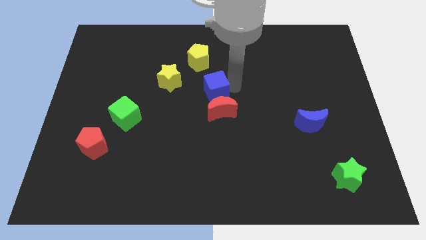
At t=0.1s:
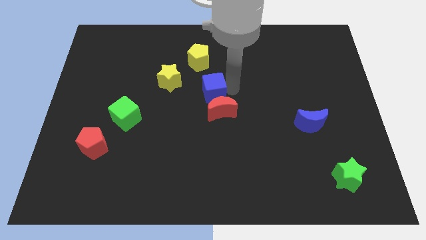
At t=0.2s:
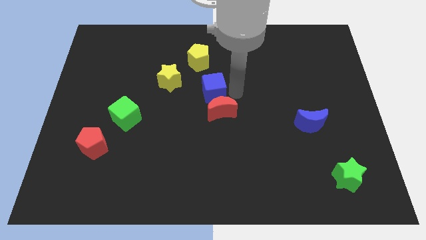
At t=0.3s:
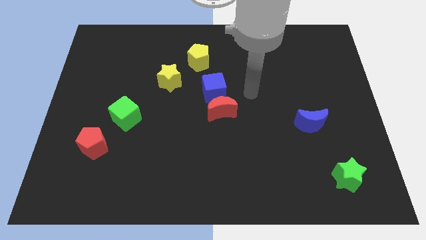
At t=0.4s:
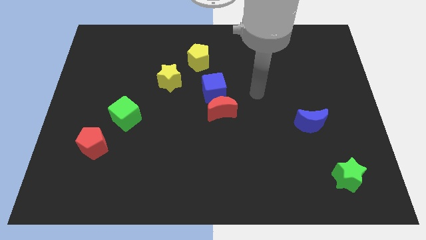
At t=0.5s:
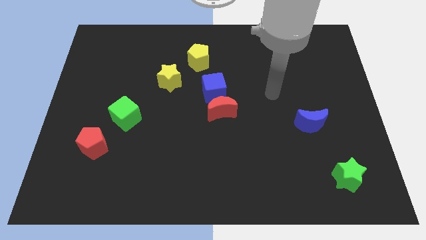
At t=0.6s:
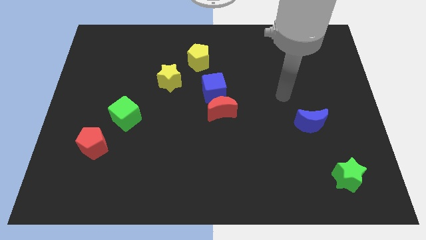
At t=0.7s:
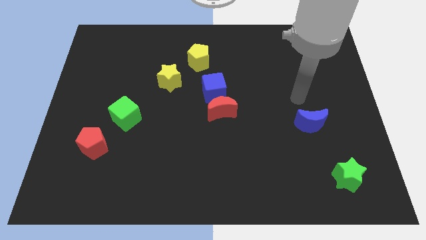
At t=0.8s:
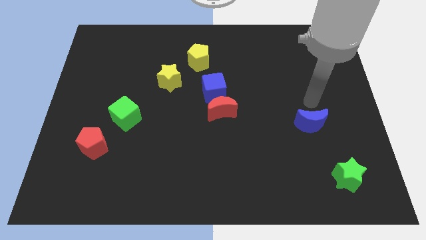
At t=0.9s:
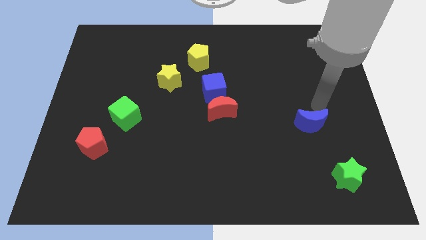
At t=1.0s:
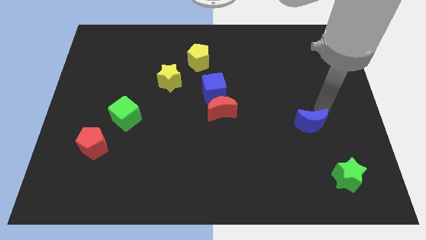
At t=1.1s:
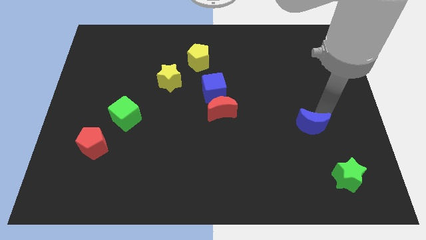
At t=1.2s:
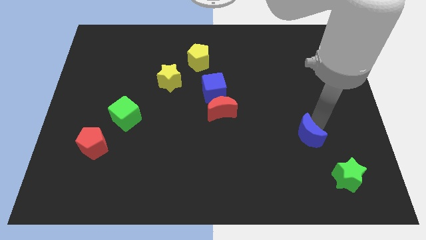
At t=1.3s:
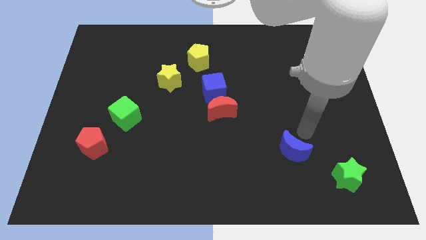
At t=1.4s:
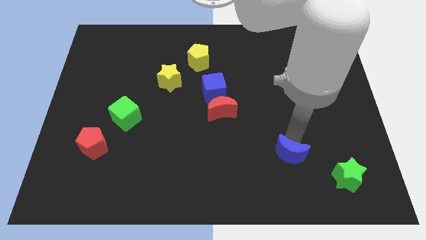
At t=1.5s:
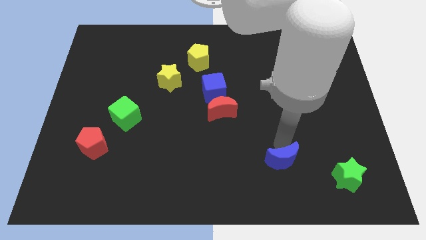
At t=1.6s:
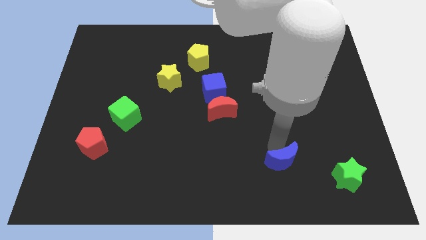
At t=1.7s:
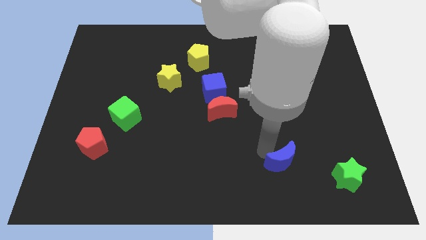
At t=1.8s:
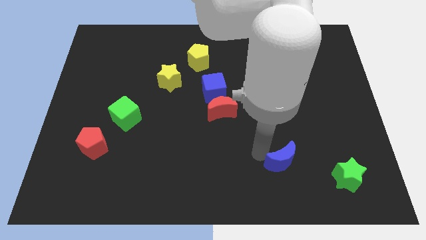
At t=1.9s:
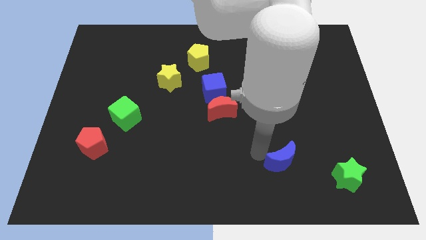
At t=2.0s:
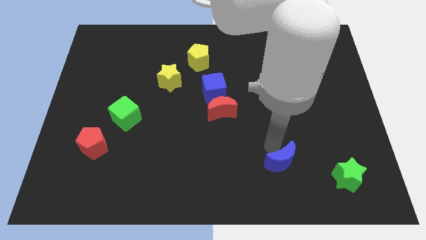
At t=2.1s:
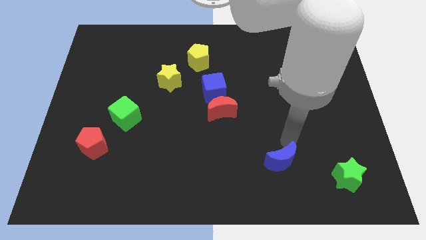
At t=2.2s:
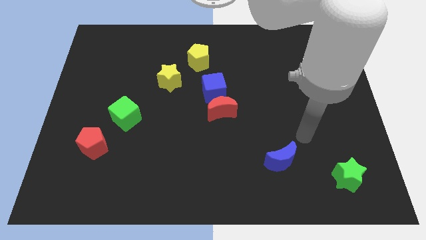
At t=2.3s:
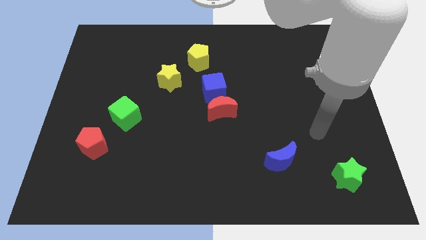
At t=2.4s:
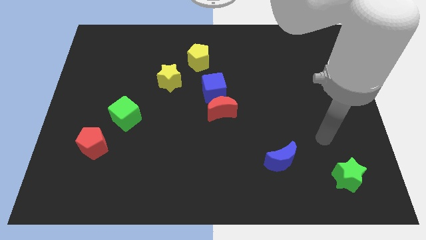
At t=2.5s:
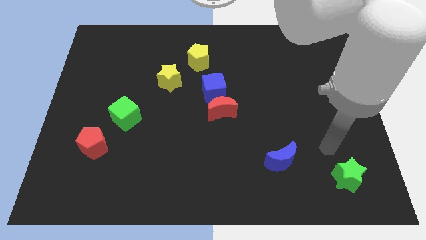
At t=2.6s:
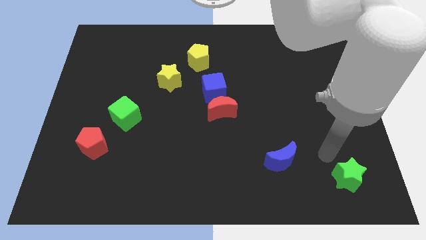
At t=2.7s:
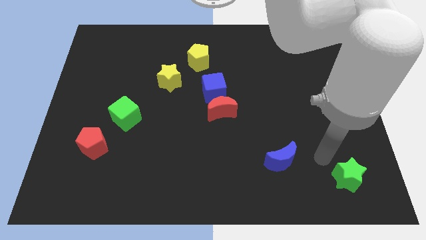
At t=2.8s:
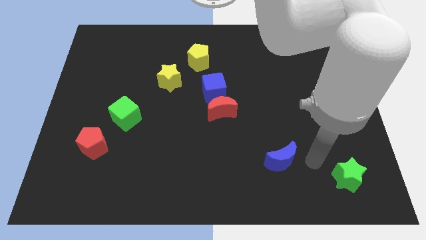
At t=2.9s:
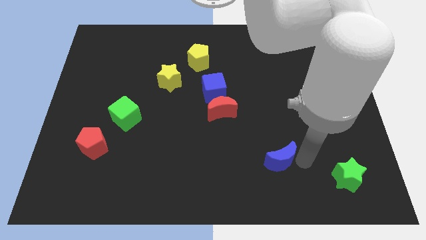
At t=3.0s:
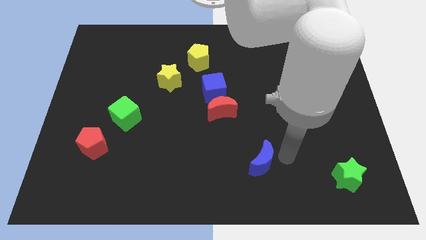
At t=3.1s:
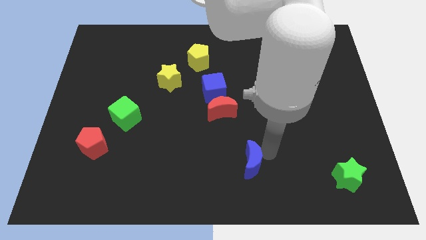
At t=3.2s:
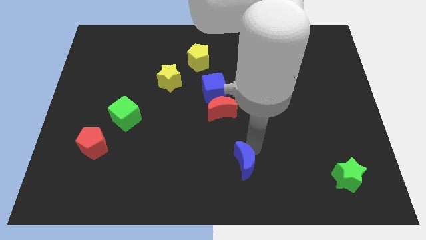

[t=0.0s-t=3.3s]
push the blue moon slightly downward

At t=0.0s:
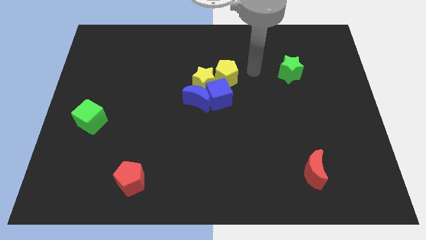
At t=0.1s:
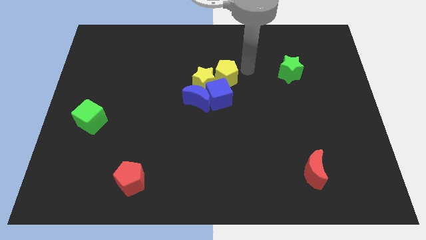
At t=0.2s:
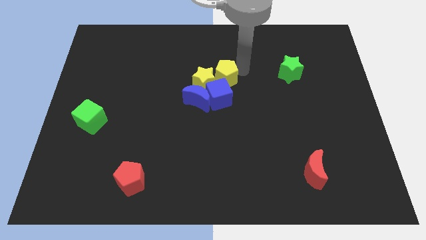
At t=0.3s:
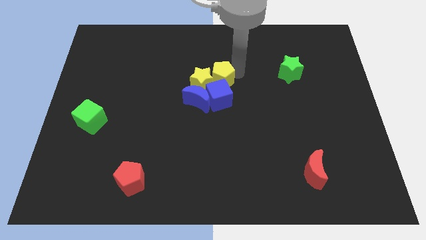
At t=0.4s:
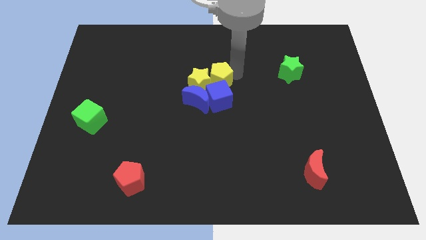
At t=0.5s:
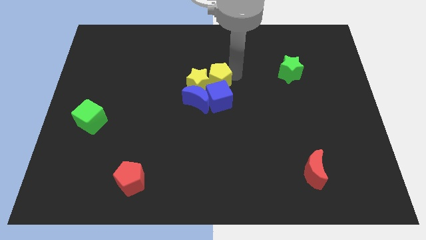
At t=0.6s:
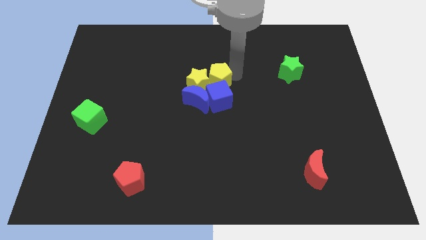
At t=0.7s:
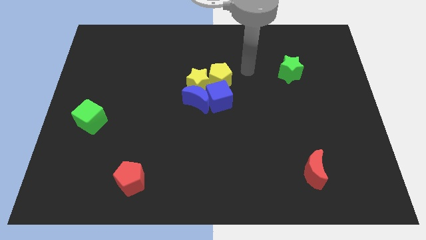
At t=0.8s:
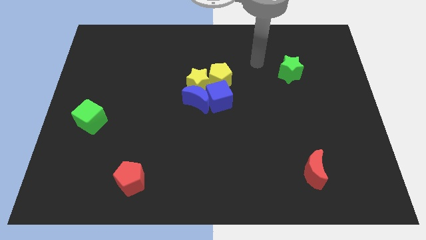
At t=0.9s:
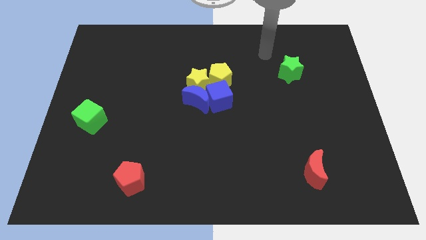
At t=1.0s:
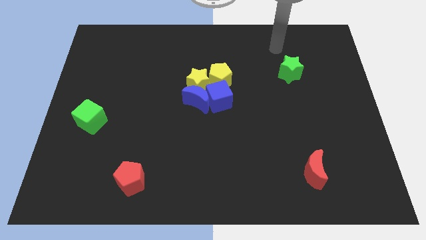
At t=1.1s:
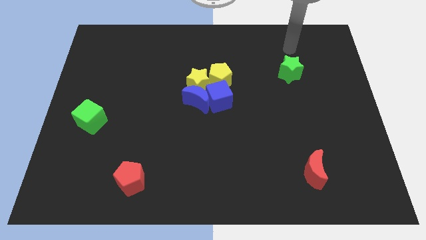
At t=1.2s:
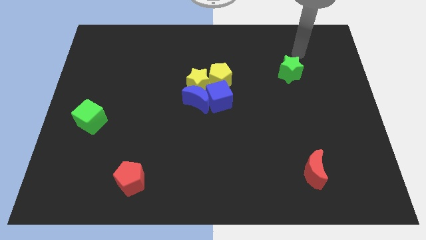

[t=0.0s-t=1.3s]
push the yellow pentagon into the yellow star

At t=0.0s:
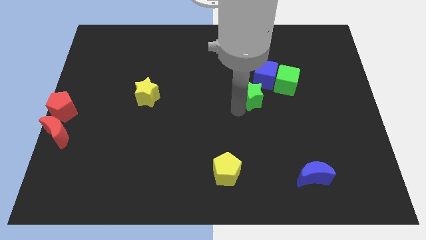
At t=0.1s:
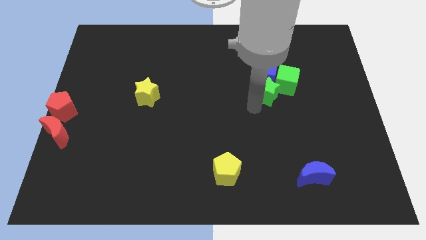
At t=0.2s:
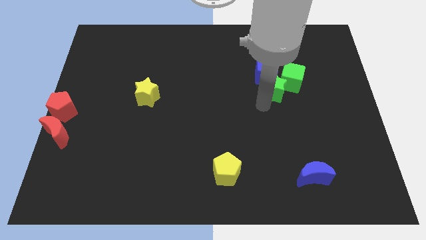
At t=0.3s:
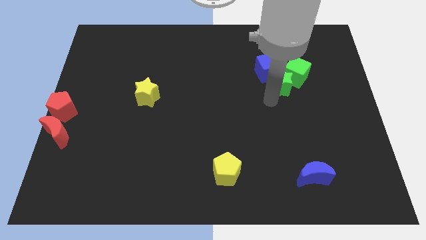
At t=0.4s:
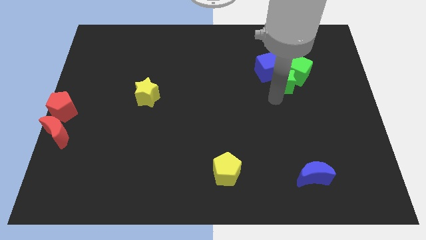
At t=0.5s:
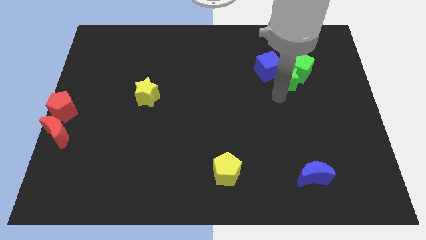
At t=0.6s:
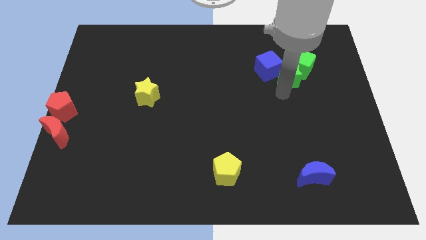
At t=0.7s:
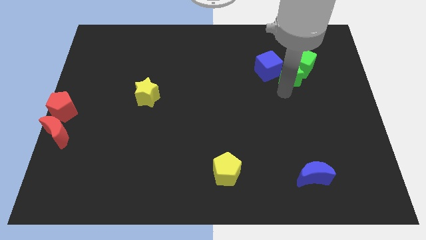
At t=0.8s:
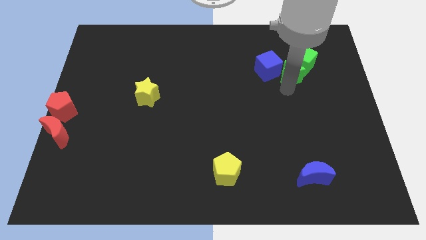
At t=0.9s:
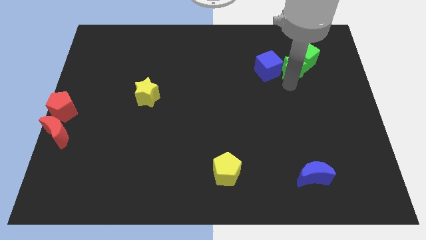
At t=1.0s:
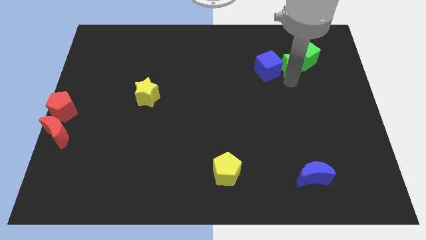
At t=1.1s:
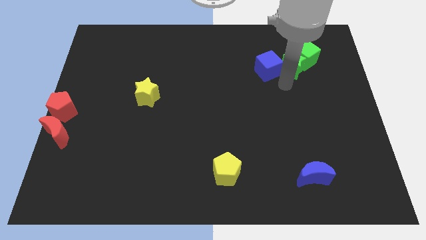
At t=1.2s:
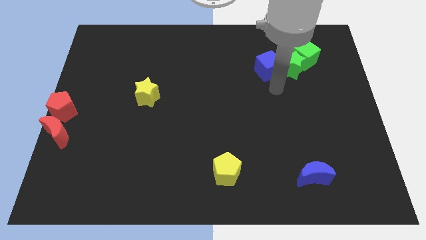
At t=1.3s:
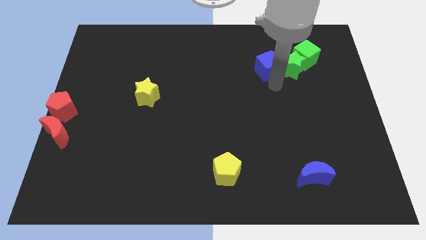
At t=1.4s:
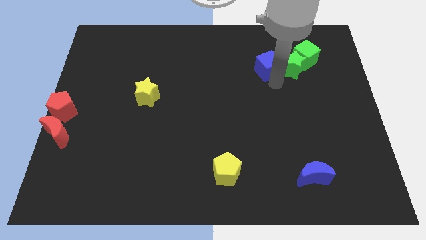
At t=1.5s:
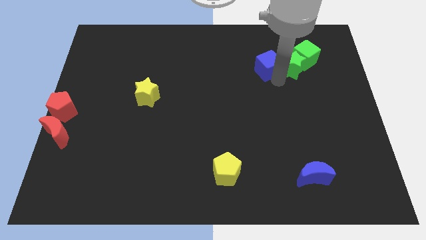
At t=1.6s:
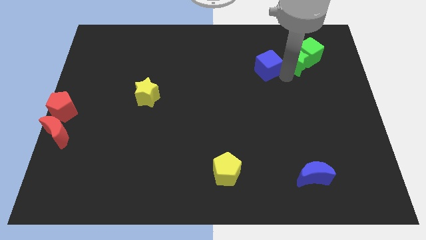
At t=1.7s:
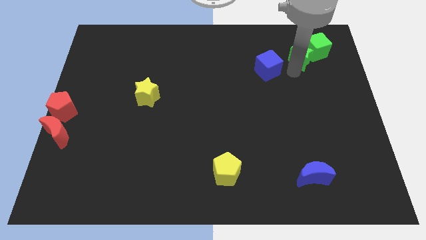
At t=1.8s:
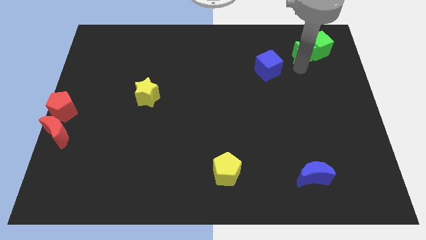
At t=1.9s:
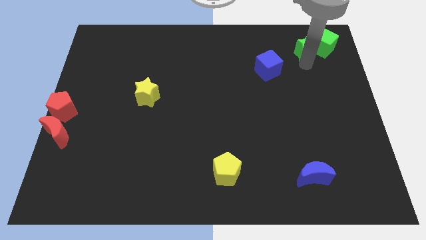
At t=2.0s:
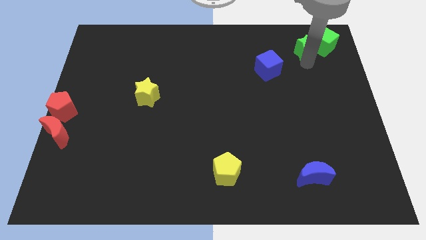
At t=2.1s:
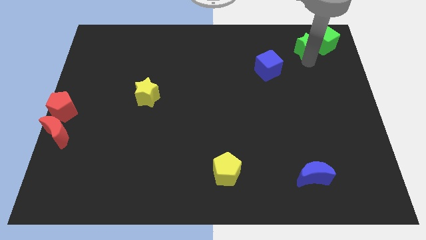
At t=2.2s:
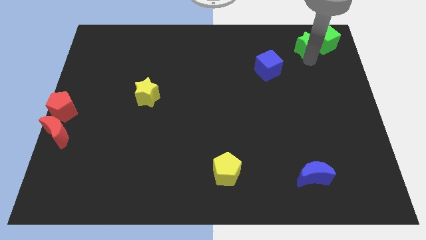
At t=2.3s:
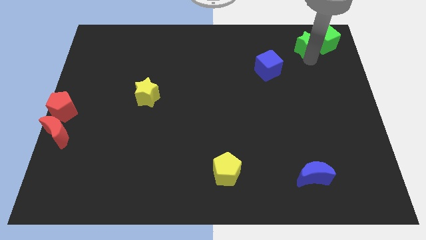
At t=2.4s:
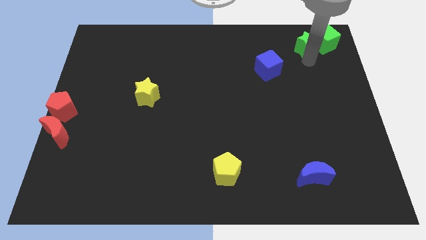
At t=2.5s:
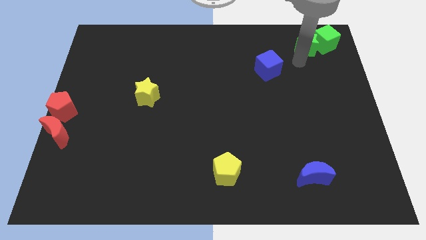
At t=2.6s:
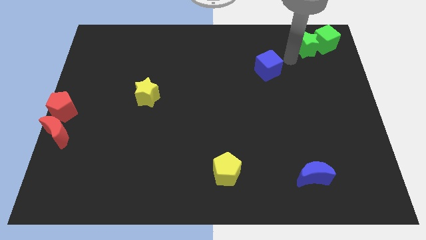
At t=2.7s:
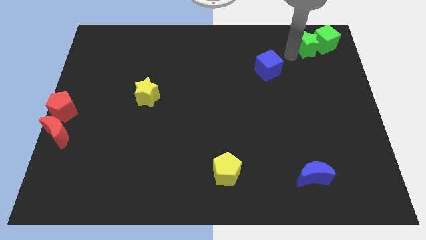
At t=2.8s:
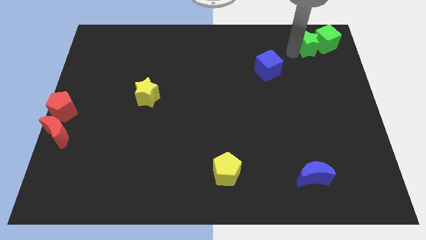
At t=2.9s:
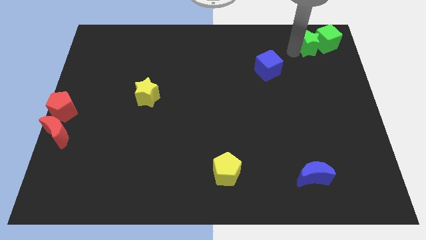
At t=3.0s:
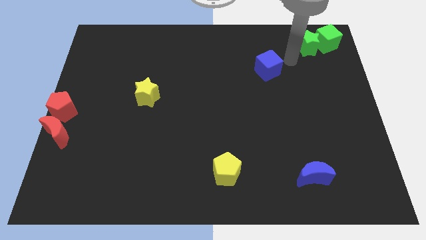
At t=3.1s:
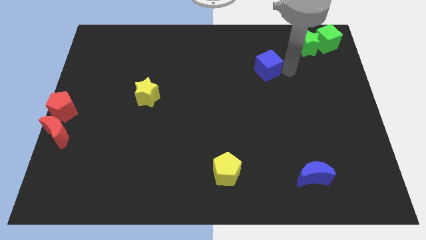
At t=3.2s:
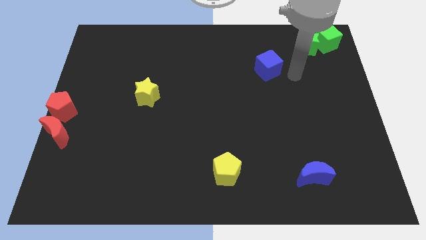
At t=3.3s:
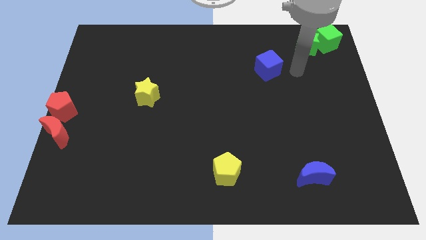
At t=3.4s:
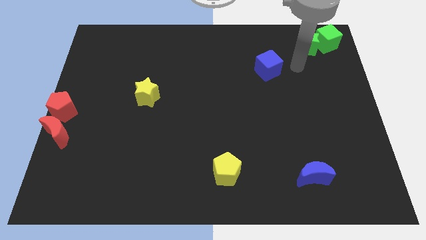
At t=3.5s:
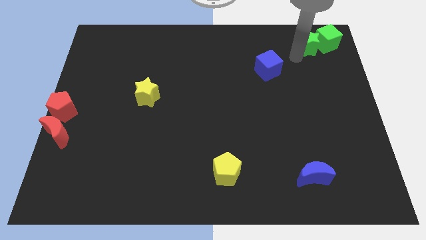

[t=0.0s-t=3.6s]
place your arm in between the green star and blue cube

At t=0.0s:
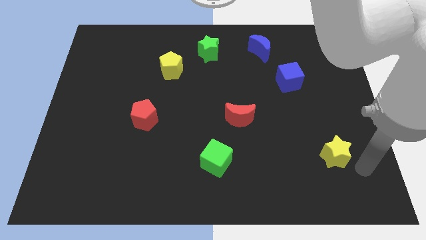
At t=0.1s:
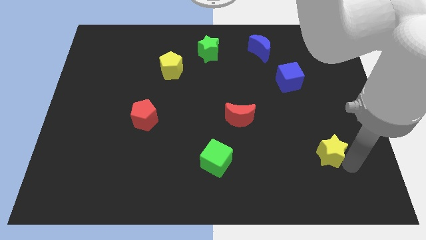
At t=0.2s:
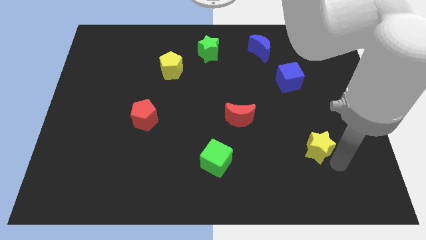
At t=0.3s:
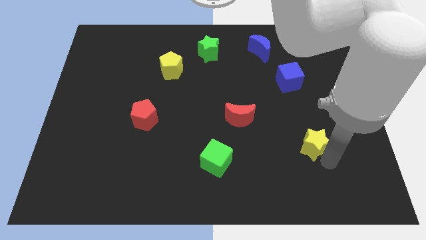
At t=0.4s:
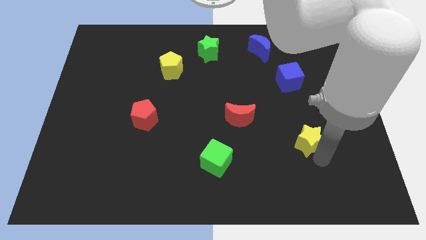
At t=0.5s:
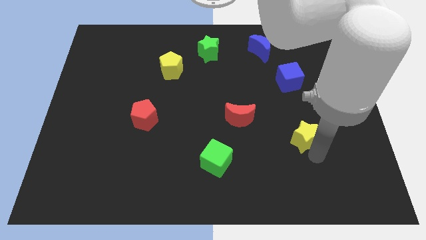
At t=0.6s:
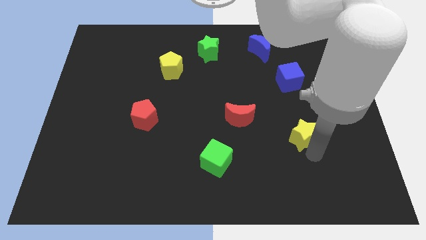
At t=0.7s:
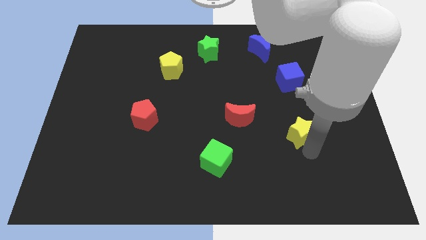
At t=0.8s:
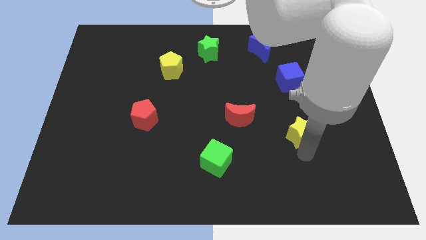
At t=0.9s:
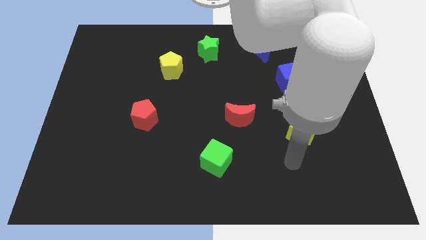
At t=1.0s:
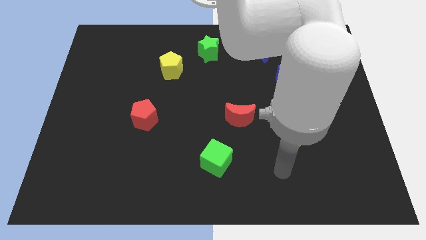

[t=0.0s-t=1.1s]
move the yellow star towards the center
